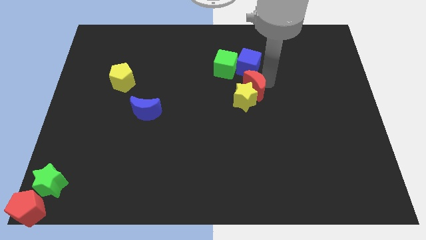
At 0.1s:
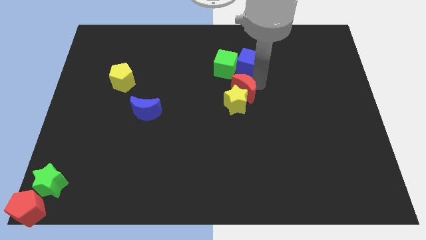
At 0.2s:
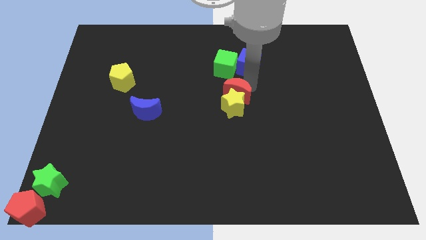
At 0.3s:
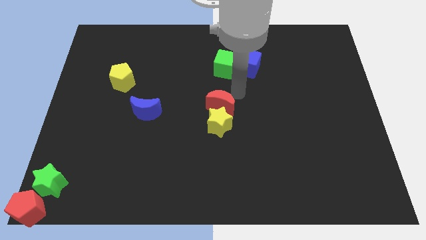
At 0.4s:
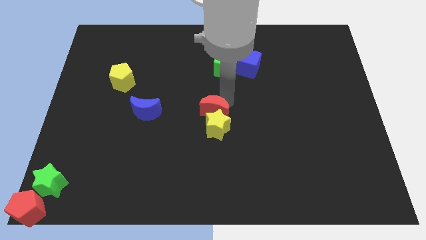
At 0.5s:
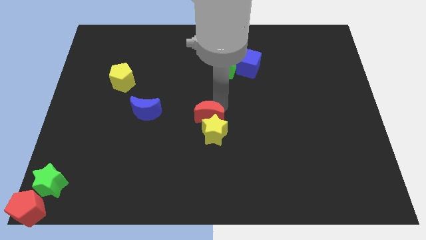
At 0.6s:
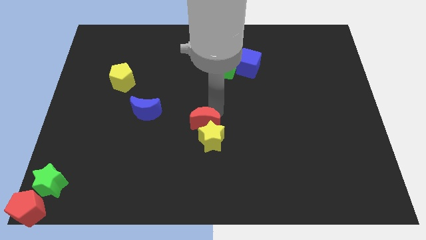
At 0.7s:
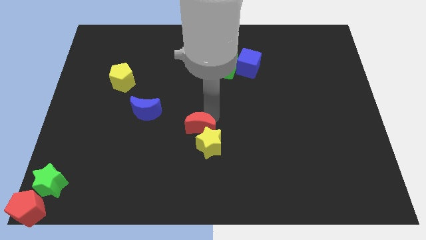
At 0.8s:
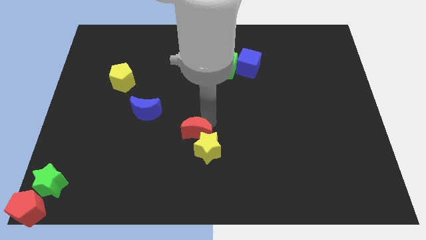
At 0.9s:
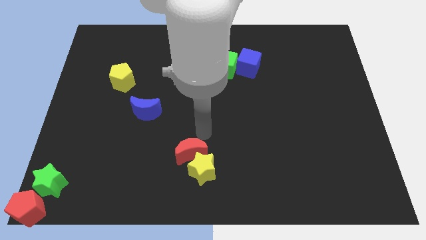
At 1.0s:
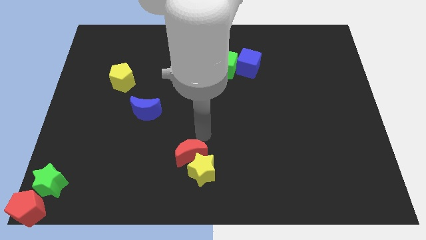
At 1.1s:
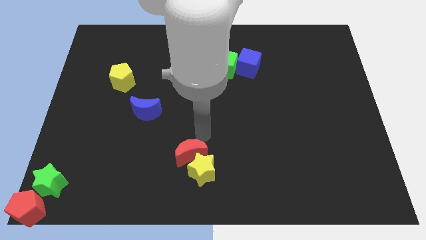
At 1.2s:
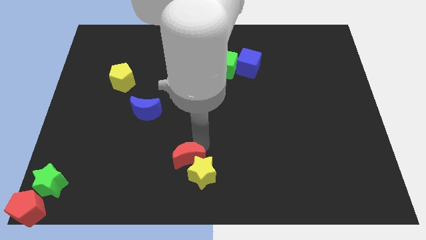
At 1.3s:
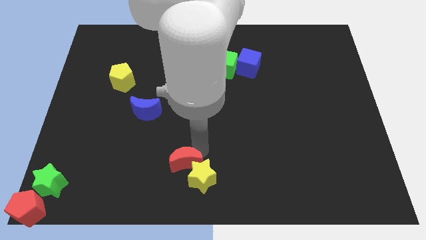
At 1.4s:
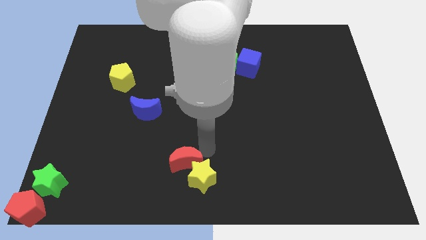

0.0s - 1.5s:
push the red crescent and yellow star towards the bottom center of the table

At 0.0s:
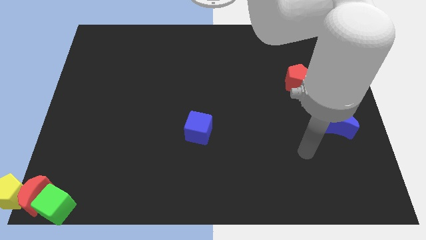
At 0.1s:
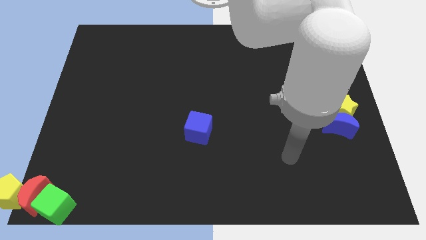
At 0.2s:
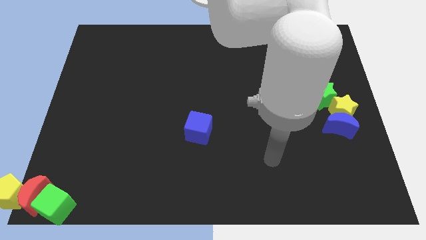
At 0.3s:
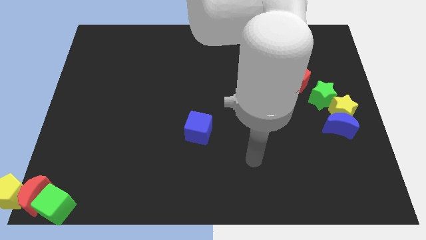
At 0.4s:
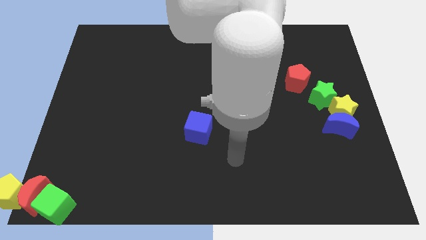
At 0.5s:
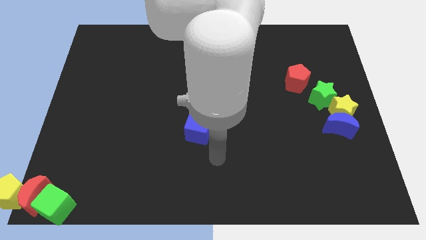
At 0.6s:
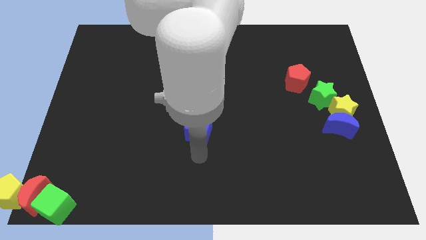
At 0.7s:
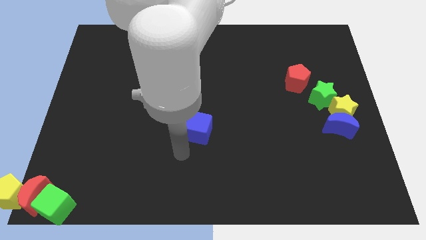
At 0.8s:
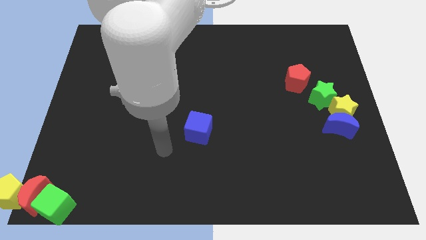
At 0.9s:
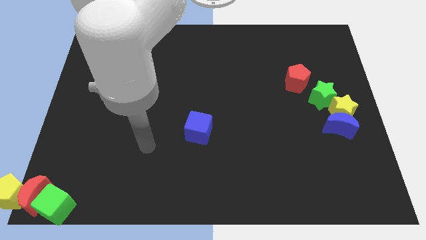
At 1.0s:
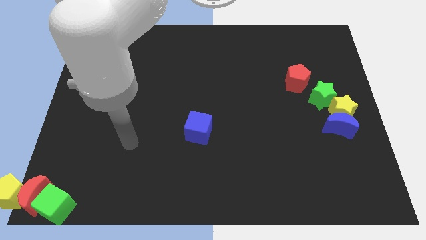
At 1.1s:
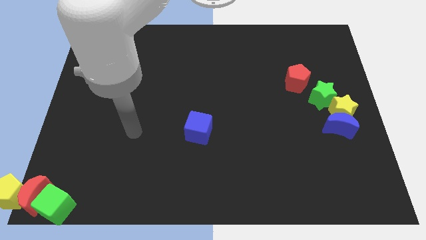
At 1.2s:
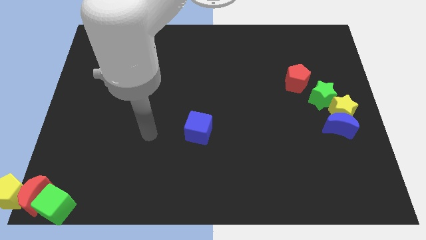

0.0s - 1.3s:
place your hand at the left of the blue cube

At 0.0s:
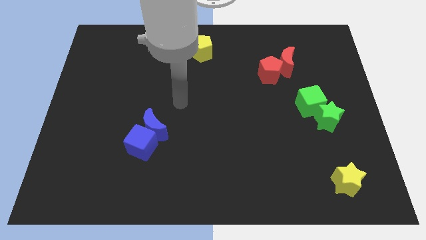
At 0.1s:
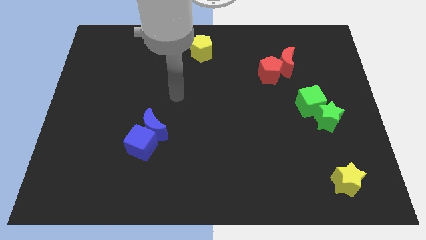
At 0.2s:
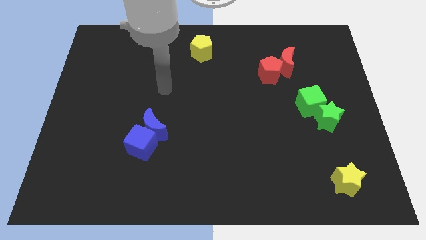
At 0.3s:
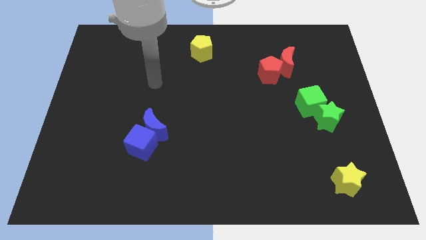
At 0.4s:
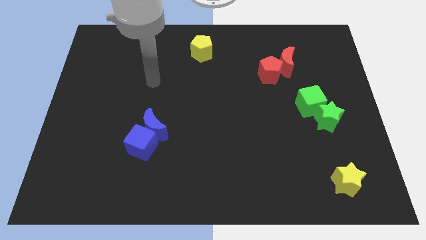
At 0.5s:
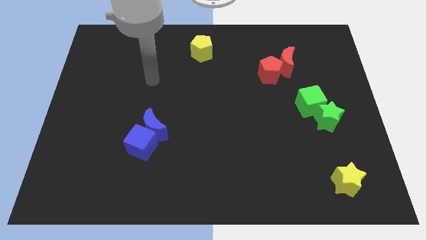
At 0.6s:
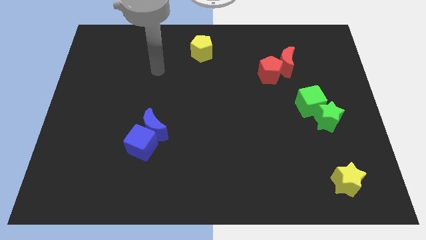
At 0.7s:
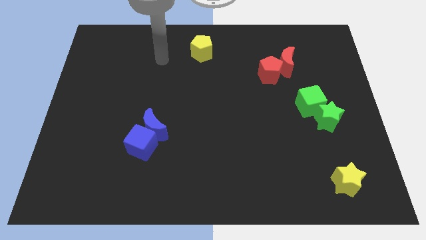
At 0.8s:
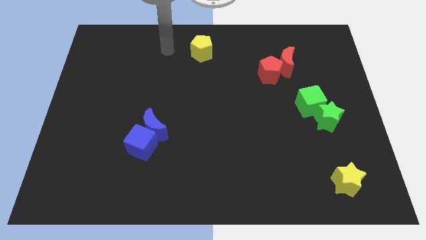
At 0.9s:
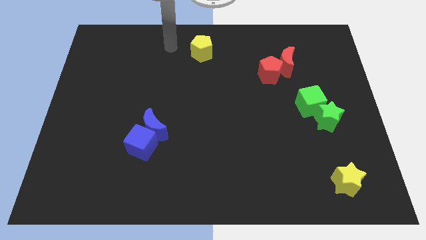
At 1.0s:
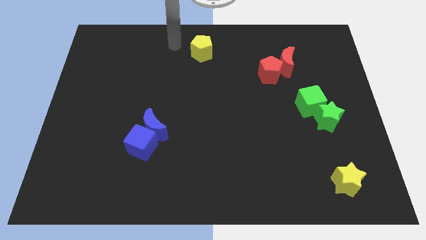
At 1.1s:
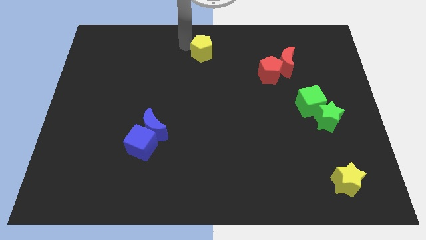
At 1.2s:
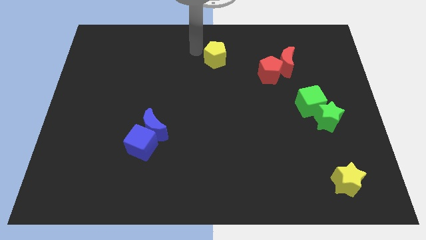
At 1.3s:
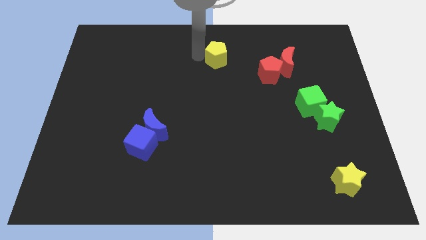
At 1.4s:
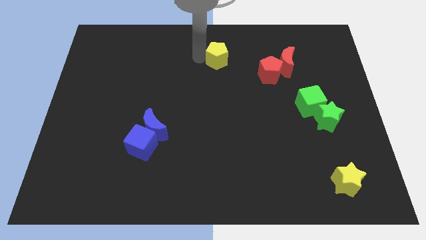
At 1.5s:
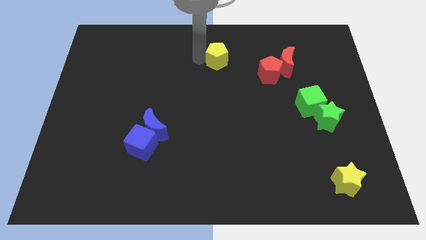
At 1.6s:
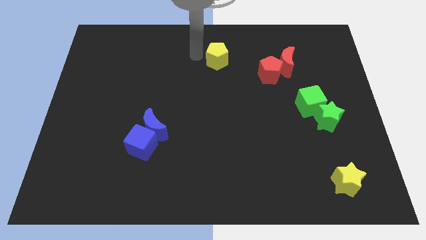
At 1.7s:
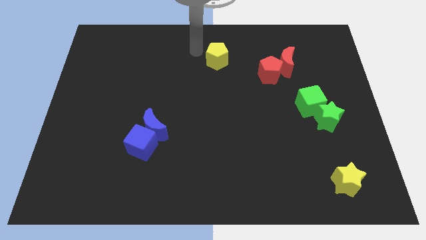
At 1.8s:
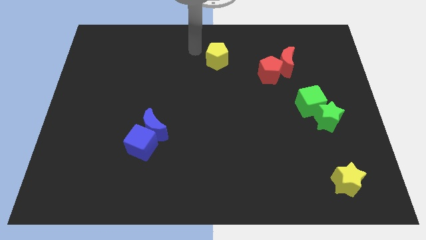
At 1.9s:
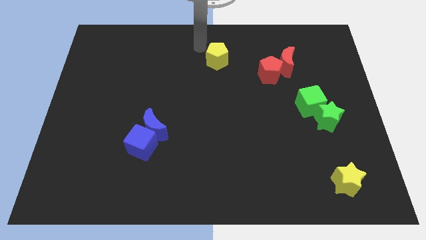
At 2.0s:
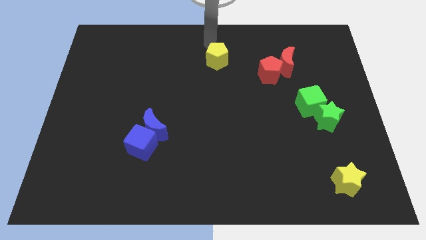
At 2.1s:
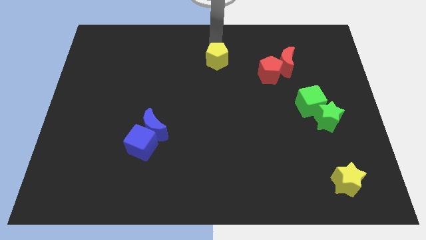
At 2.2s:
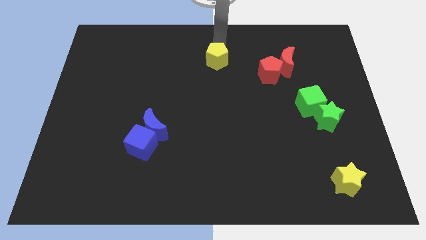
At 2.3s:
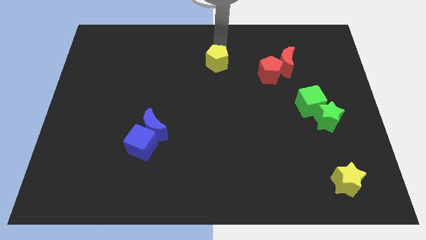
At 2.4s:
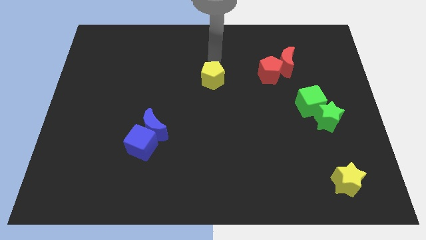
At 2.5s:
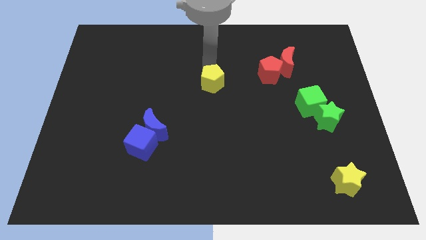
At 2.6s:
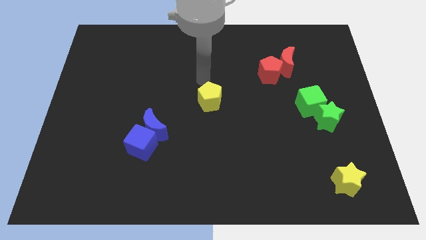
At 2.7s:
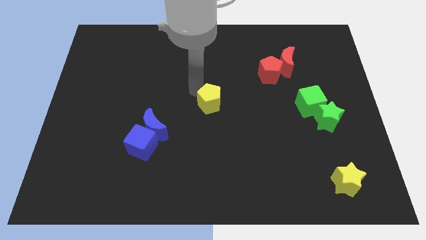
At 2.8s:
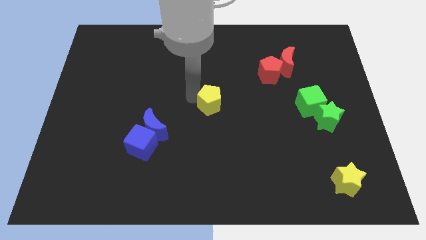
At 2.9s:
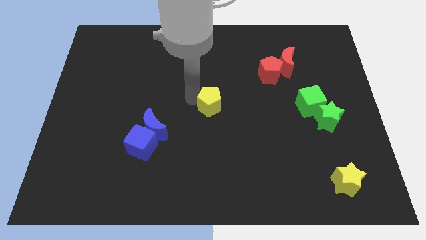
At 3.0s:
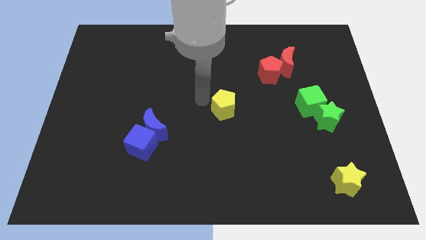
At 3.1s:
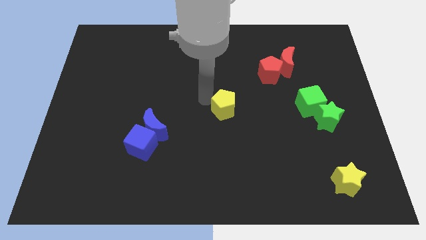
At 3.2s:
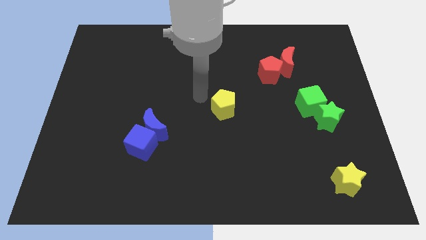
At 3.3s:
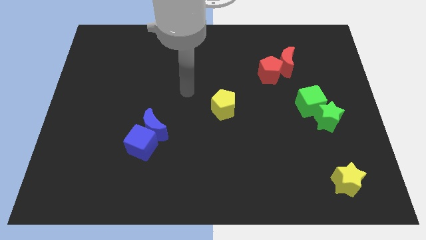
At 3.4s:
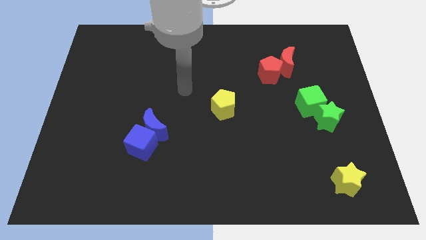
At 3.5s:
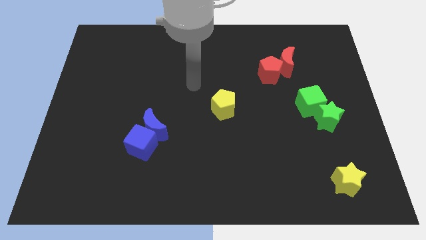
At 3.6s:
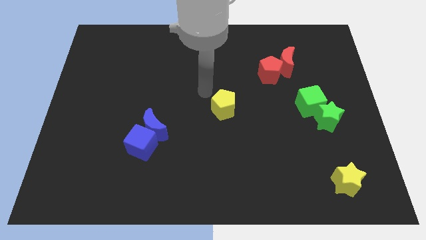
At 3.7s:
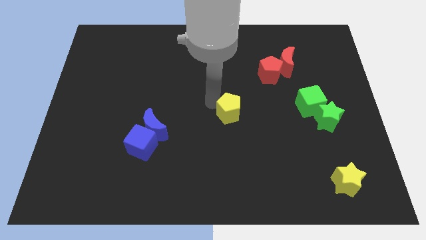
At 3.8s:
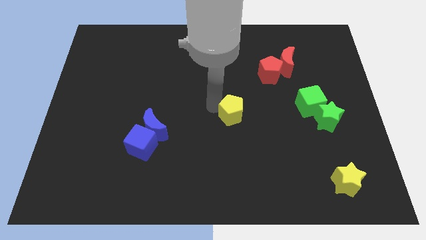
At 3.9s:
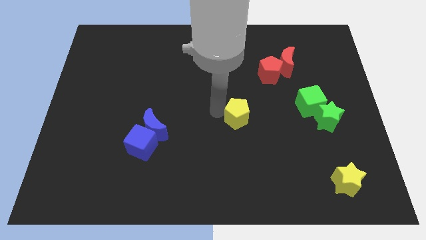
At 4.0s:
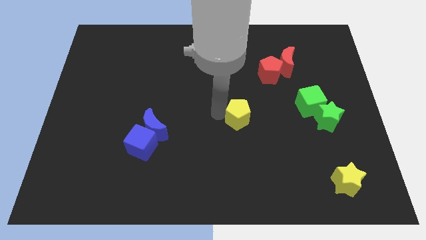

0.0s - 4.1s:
place the yellow pentagon to the left of green star

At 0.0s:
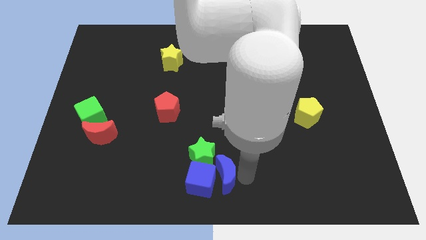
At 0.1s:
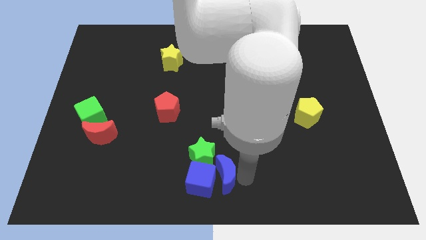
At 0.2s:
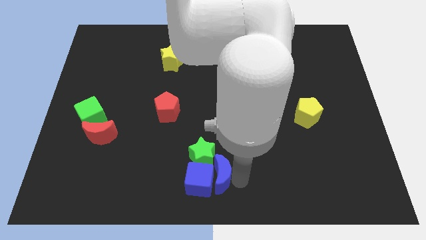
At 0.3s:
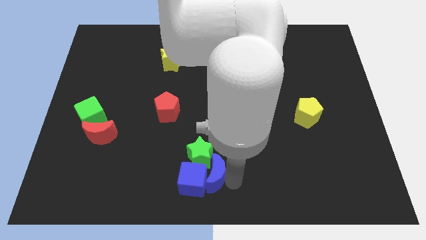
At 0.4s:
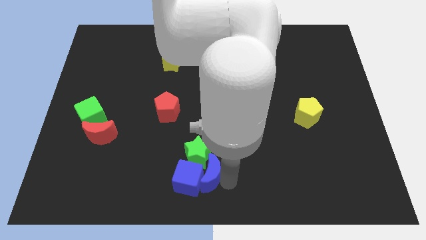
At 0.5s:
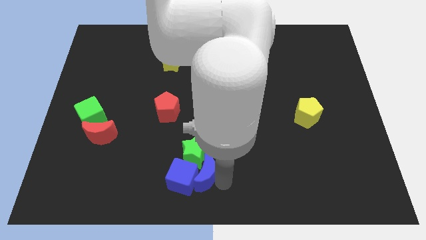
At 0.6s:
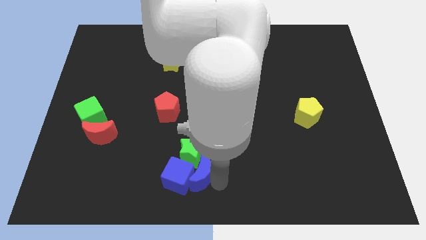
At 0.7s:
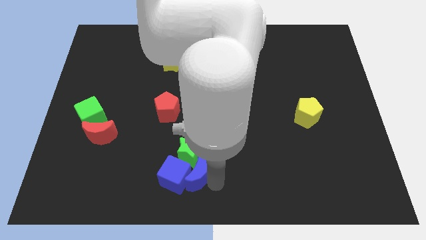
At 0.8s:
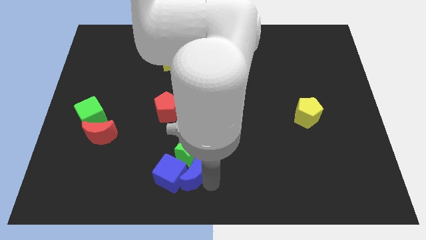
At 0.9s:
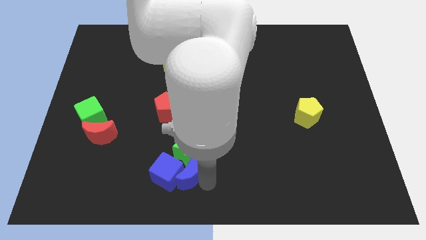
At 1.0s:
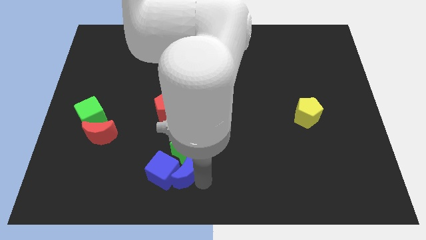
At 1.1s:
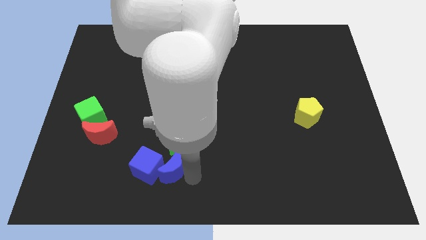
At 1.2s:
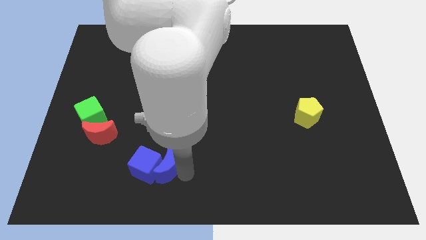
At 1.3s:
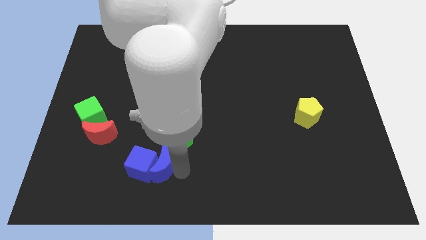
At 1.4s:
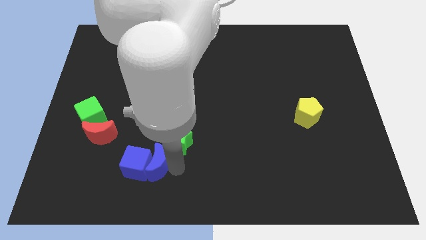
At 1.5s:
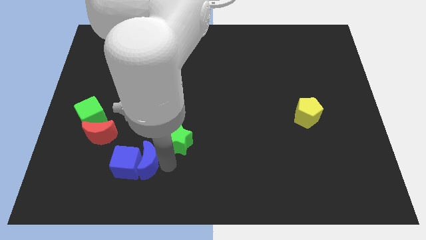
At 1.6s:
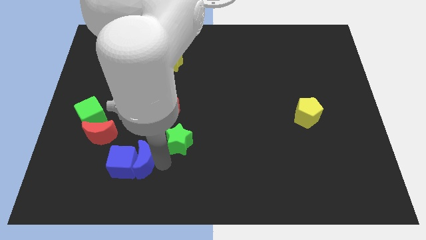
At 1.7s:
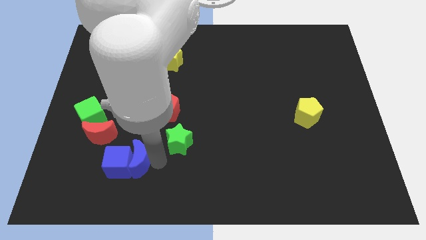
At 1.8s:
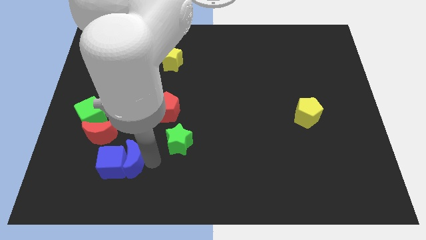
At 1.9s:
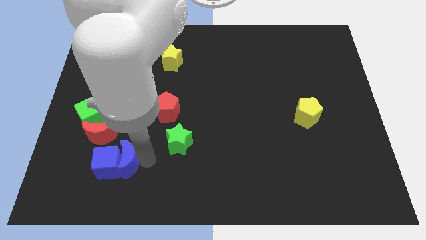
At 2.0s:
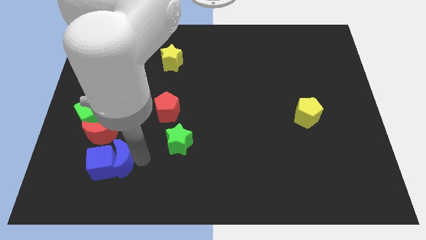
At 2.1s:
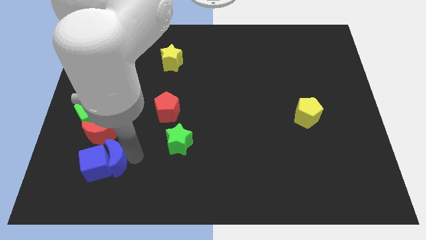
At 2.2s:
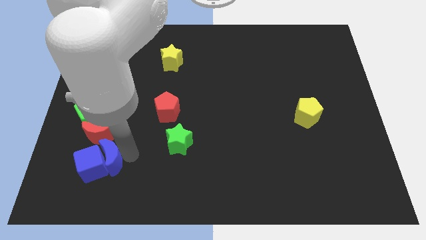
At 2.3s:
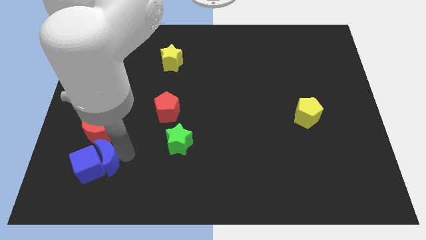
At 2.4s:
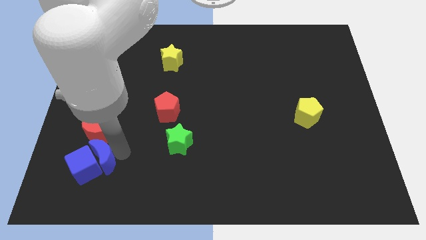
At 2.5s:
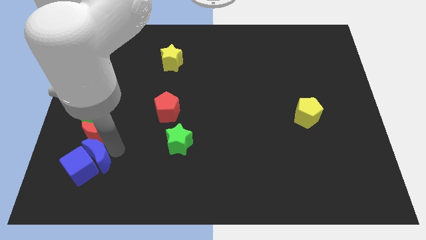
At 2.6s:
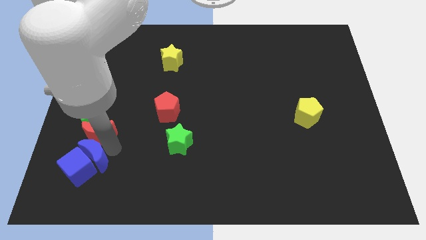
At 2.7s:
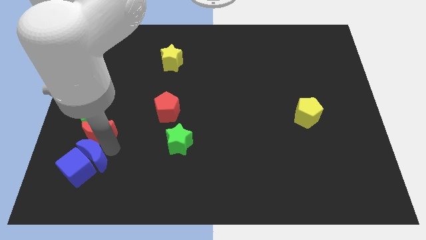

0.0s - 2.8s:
push the blue crescent along with blue cube to the bottom of the red crescent
